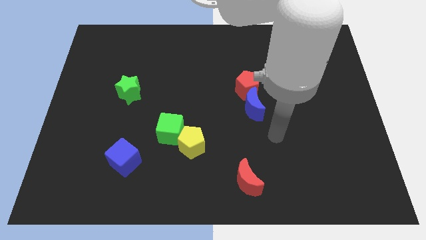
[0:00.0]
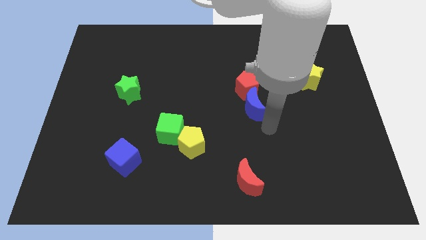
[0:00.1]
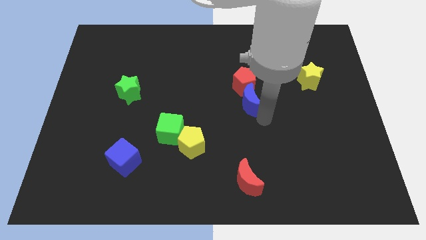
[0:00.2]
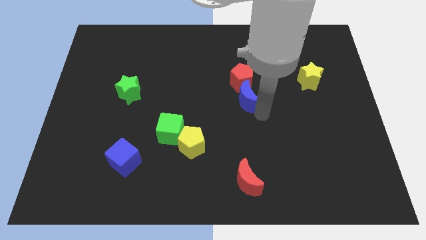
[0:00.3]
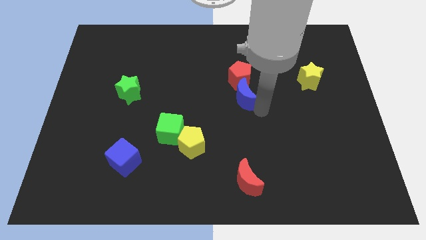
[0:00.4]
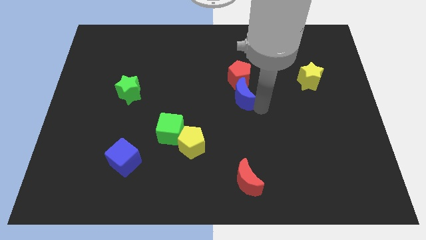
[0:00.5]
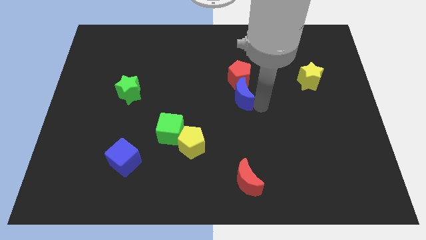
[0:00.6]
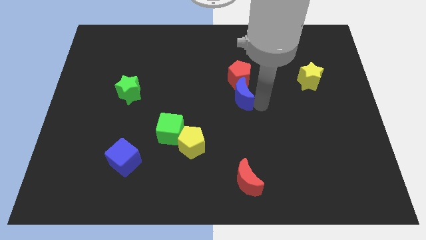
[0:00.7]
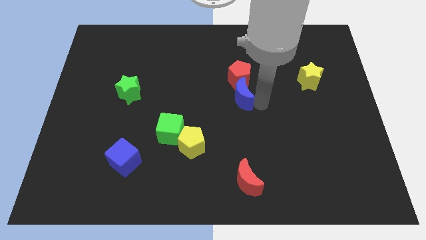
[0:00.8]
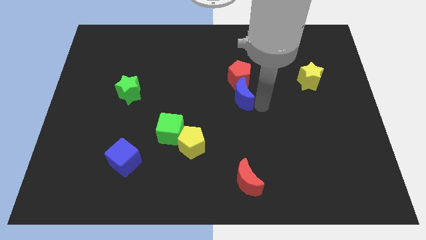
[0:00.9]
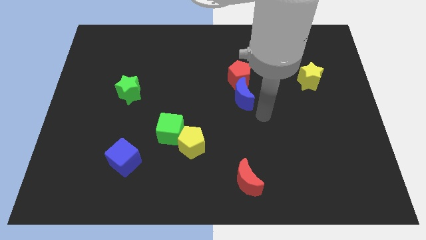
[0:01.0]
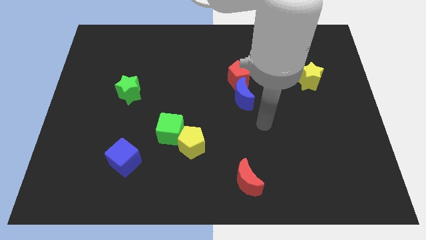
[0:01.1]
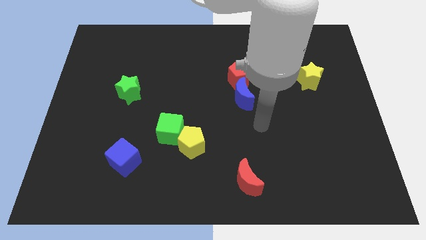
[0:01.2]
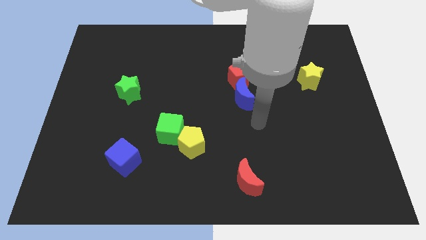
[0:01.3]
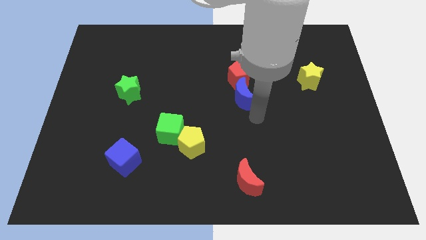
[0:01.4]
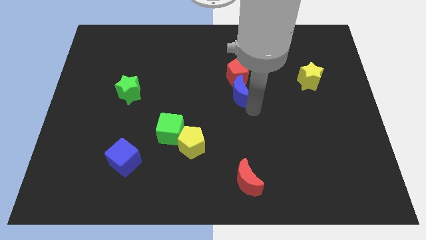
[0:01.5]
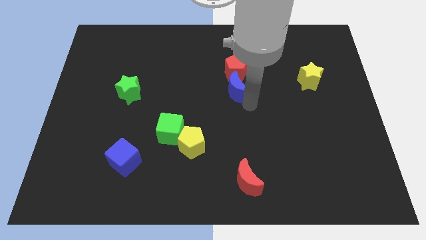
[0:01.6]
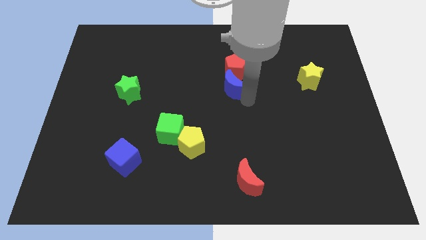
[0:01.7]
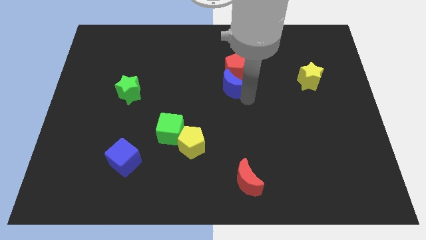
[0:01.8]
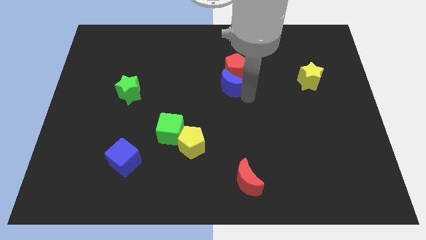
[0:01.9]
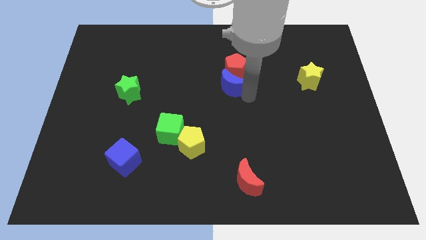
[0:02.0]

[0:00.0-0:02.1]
push the blue crescent and red pentagon towards top center

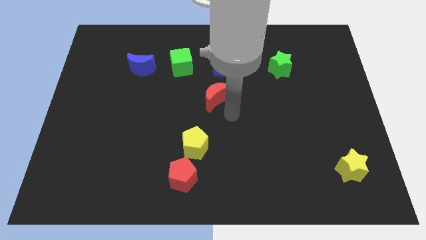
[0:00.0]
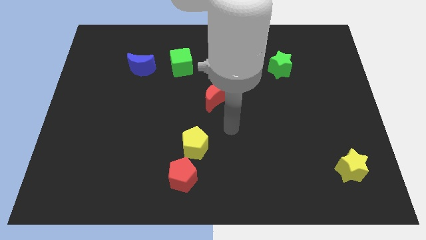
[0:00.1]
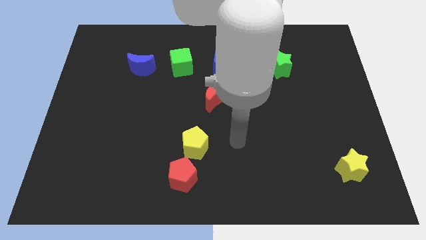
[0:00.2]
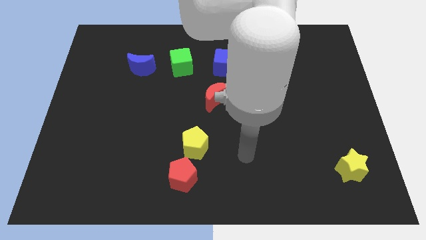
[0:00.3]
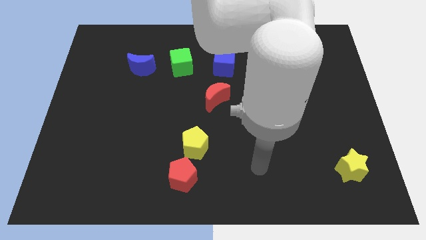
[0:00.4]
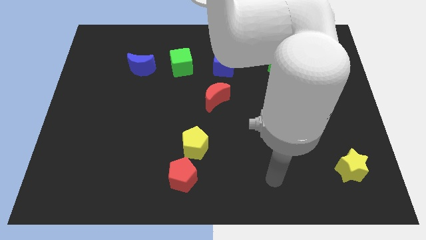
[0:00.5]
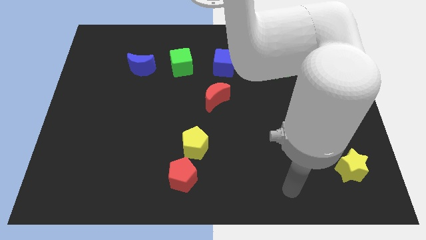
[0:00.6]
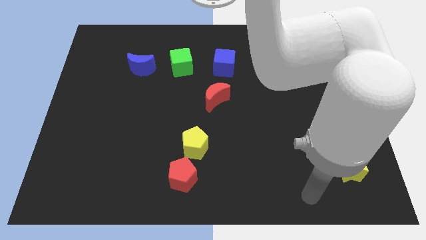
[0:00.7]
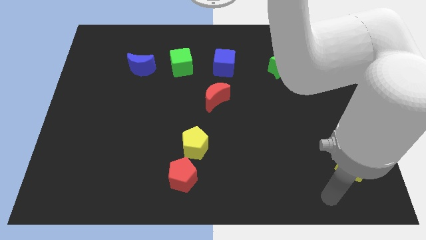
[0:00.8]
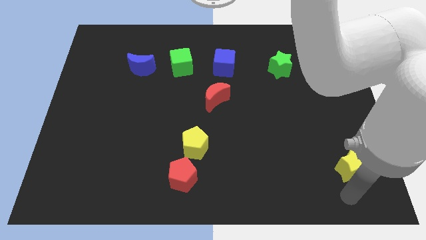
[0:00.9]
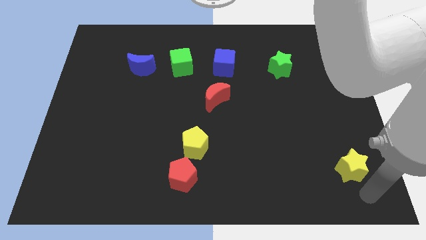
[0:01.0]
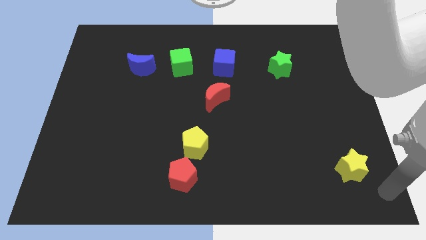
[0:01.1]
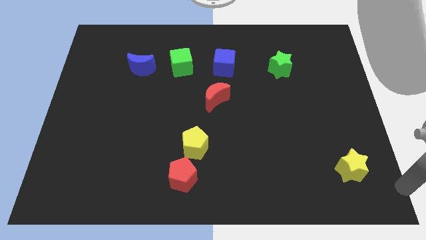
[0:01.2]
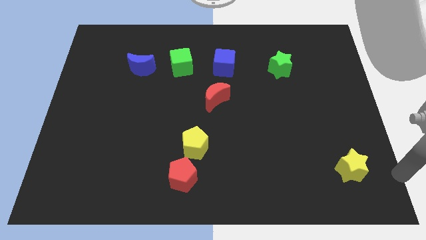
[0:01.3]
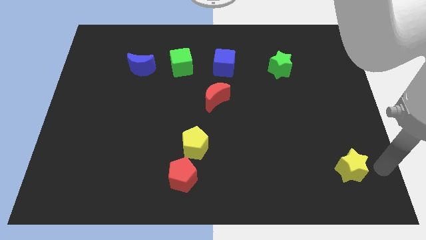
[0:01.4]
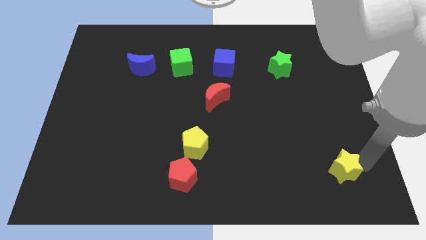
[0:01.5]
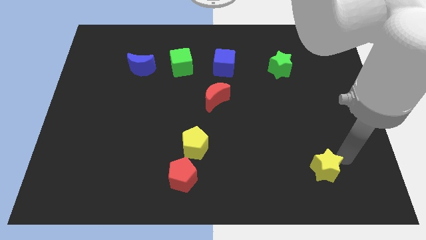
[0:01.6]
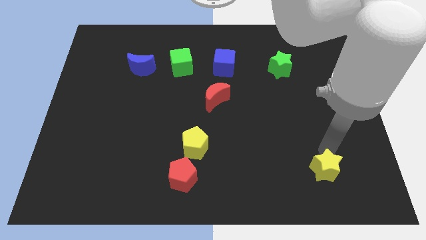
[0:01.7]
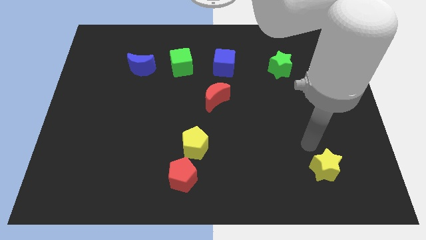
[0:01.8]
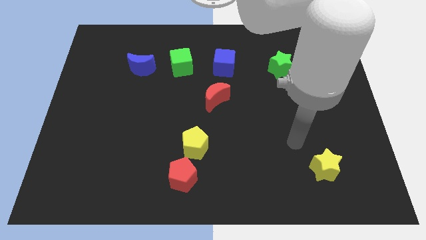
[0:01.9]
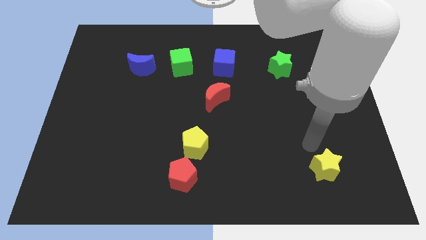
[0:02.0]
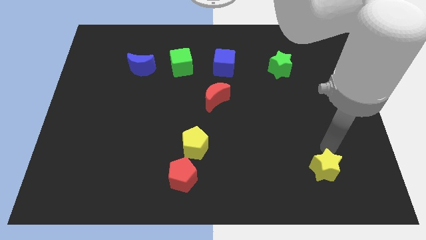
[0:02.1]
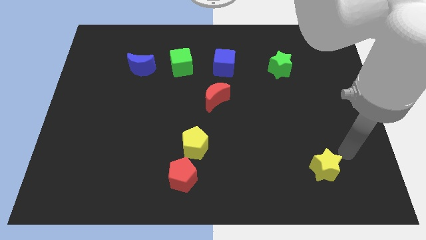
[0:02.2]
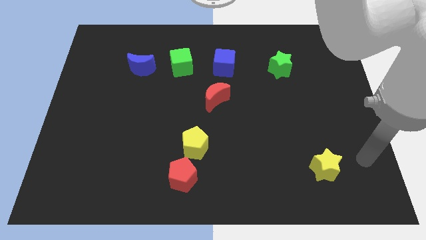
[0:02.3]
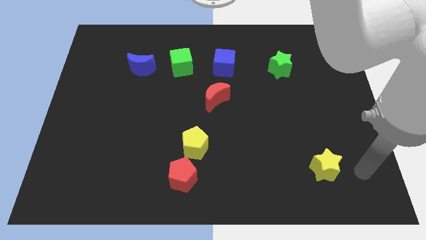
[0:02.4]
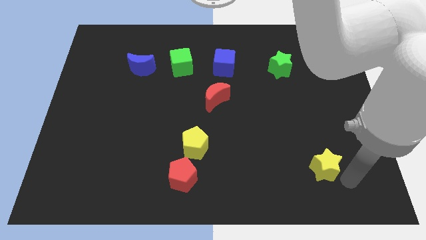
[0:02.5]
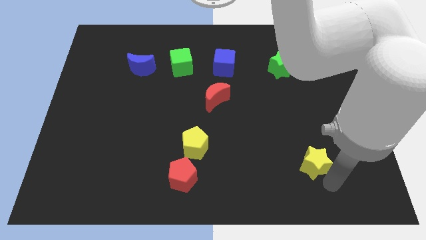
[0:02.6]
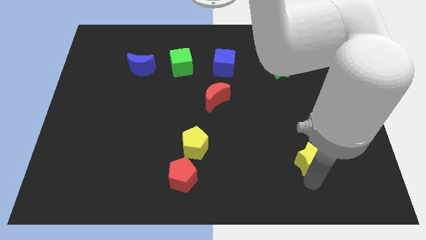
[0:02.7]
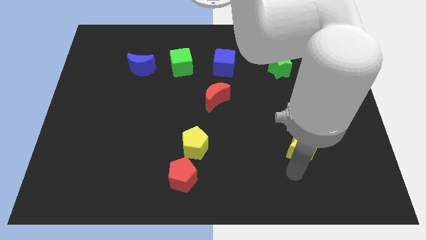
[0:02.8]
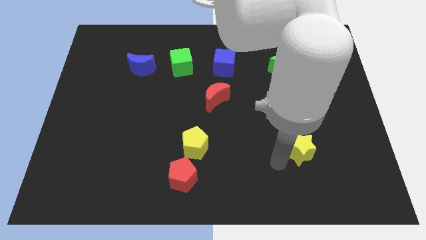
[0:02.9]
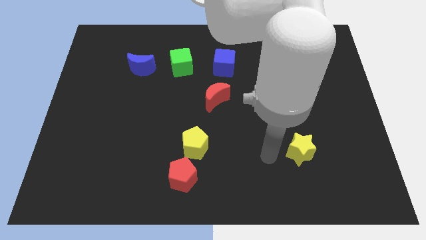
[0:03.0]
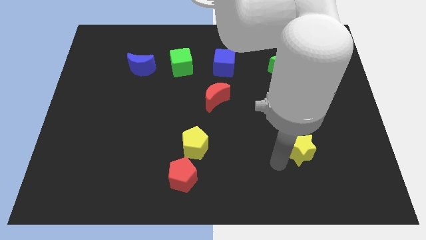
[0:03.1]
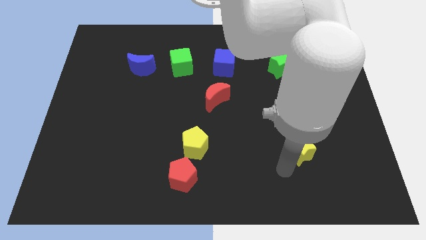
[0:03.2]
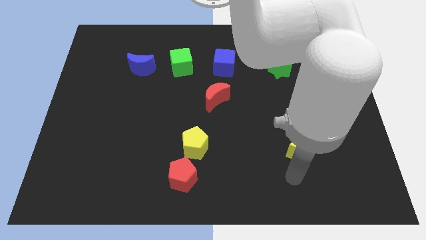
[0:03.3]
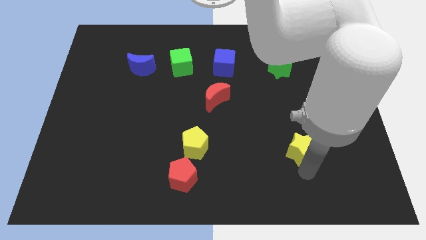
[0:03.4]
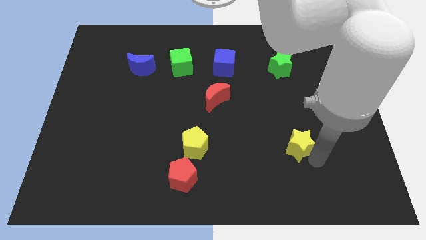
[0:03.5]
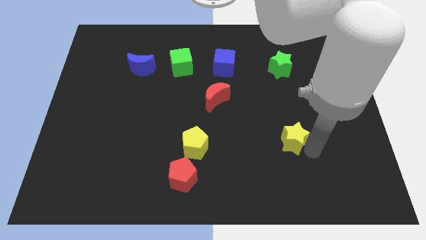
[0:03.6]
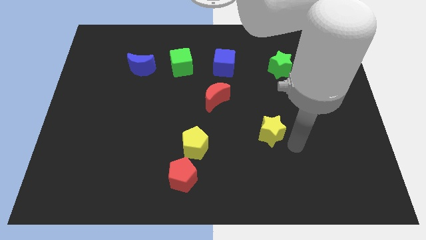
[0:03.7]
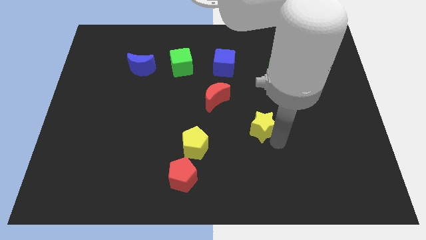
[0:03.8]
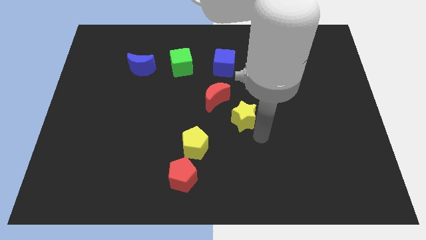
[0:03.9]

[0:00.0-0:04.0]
drag the yellow star diagonally top right to the yellow pentagon

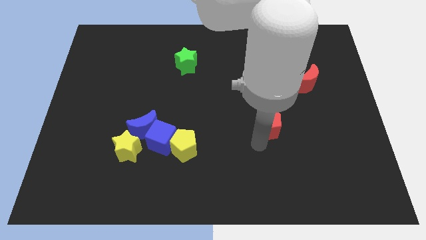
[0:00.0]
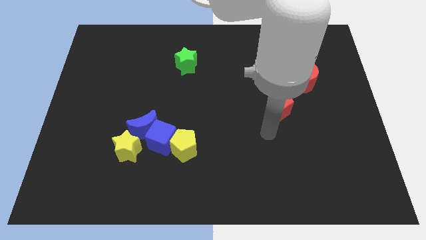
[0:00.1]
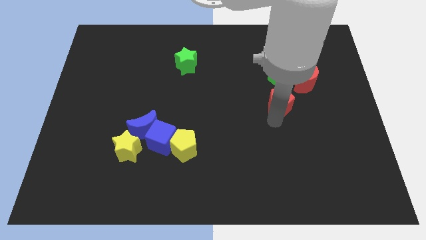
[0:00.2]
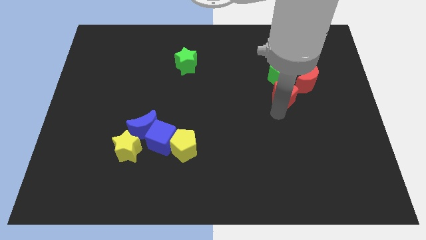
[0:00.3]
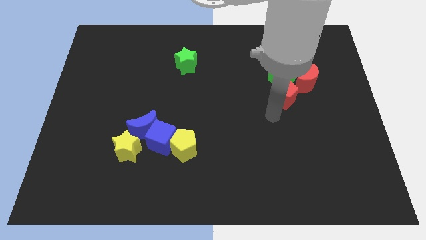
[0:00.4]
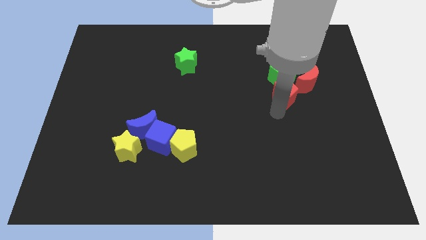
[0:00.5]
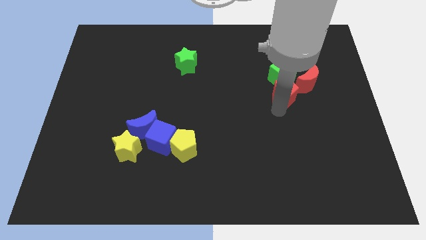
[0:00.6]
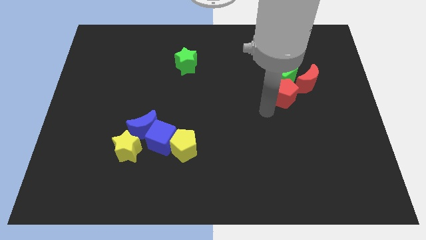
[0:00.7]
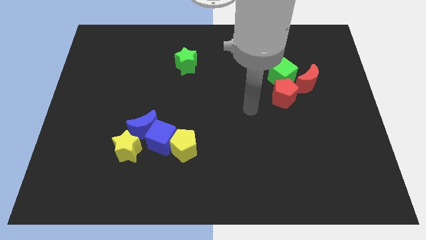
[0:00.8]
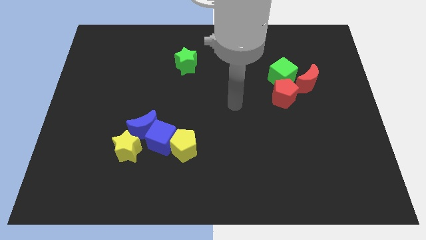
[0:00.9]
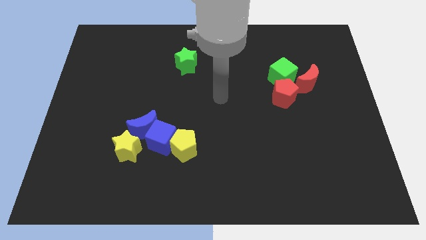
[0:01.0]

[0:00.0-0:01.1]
move your arm away from red pentagon

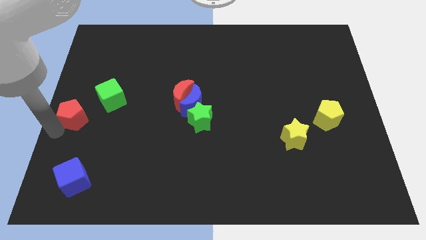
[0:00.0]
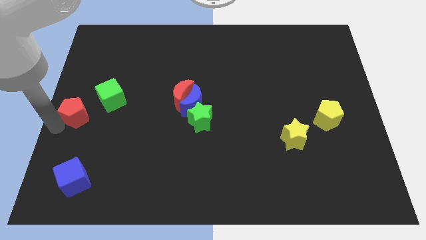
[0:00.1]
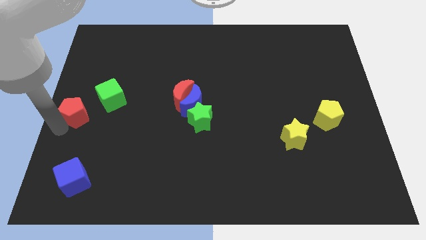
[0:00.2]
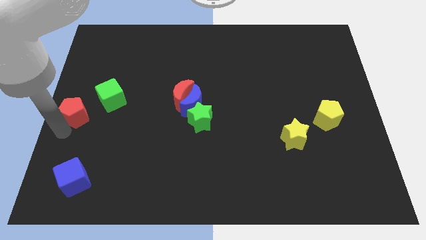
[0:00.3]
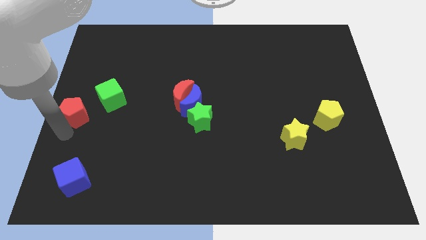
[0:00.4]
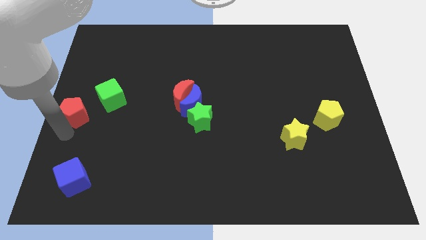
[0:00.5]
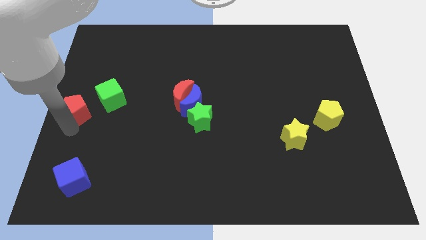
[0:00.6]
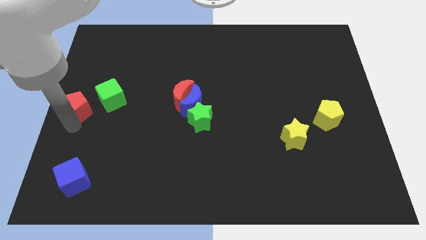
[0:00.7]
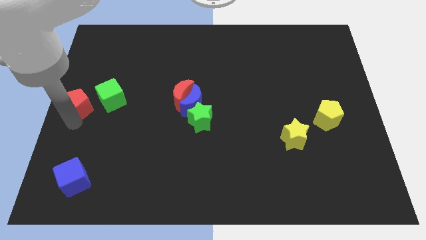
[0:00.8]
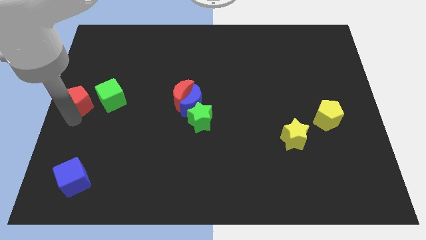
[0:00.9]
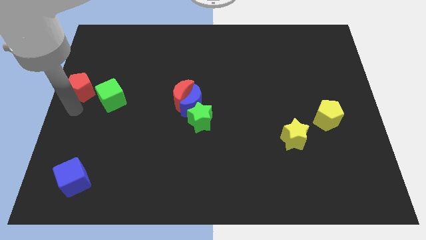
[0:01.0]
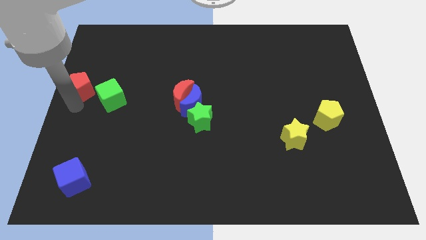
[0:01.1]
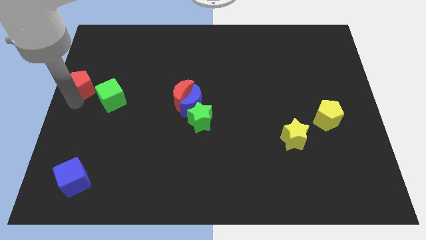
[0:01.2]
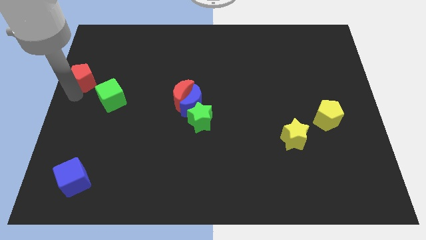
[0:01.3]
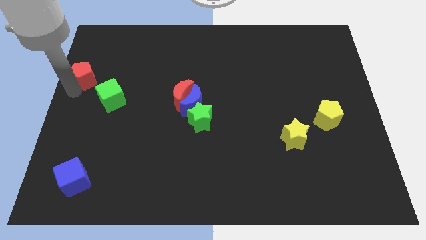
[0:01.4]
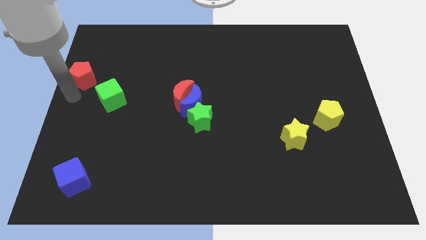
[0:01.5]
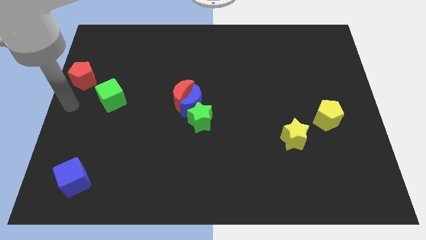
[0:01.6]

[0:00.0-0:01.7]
move red pentagon to the top left of green cube
